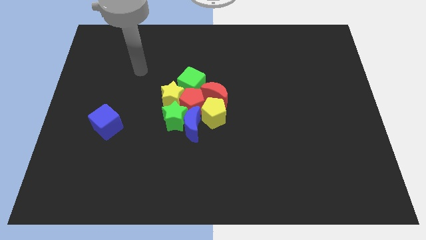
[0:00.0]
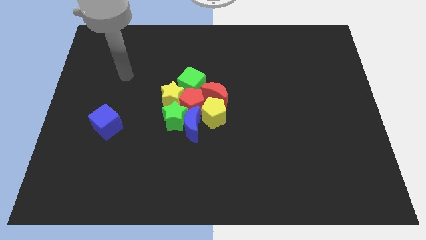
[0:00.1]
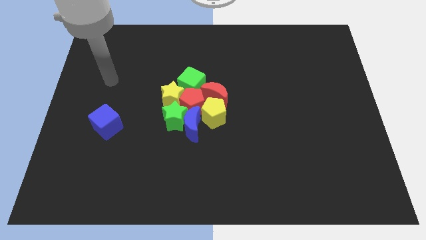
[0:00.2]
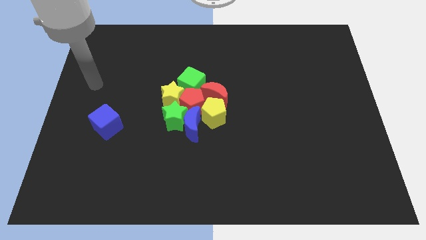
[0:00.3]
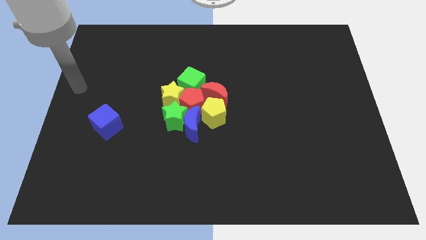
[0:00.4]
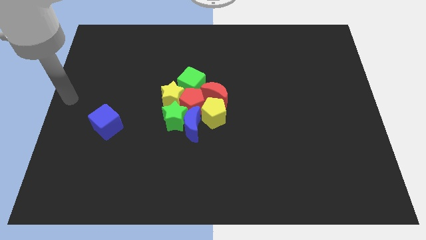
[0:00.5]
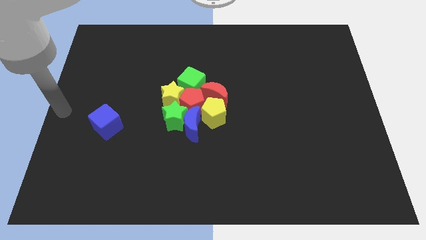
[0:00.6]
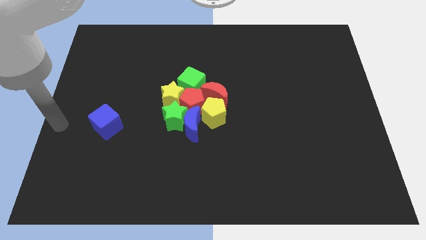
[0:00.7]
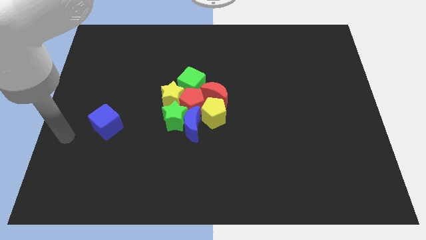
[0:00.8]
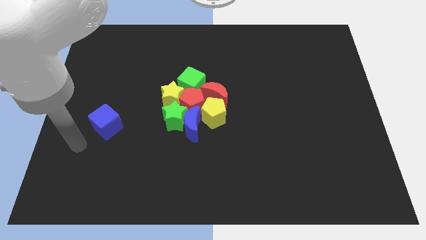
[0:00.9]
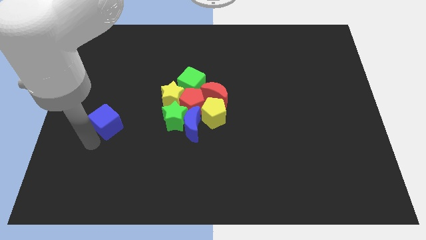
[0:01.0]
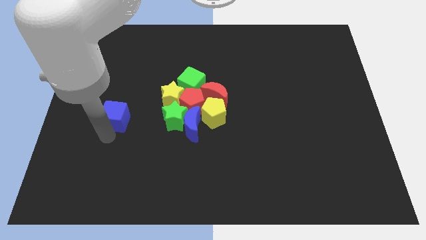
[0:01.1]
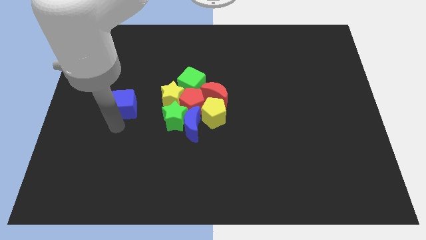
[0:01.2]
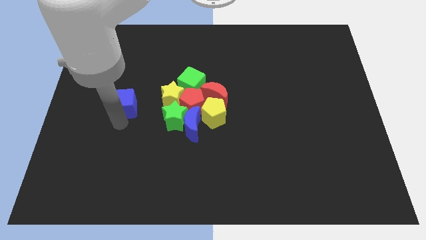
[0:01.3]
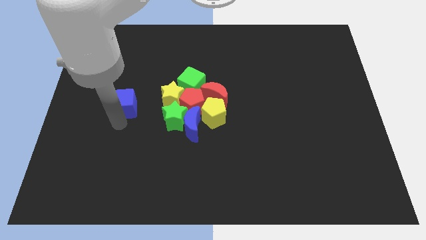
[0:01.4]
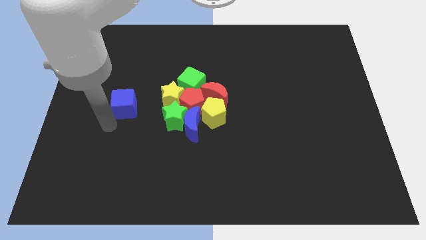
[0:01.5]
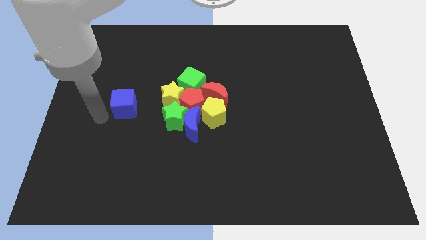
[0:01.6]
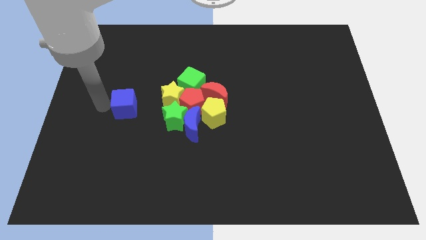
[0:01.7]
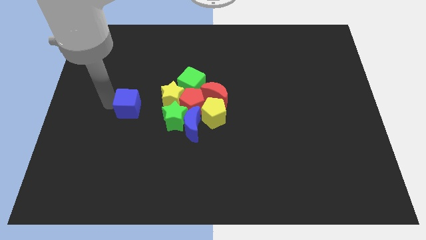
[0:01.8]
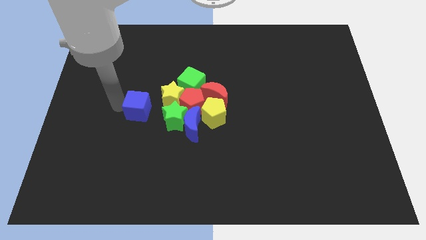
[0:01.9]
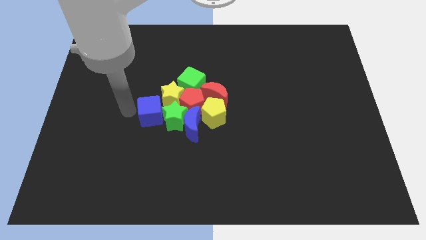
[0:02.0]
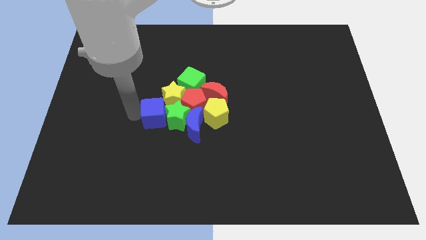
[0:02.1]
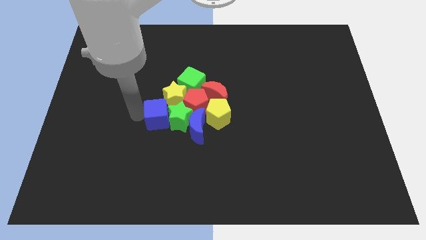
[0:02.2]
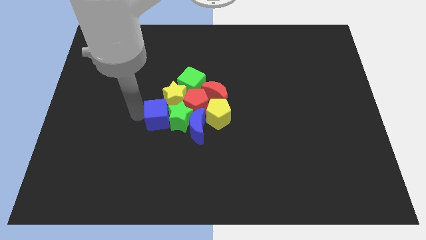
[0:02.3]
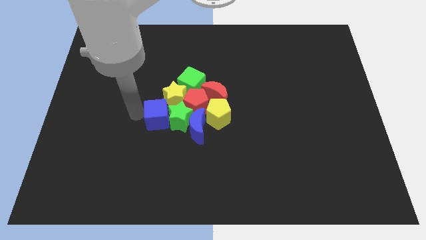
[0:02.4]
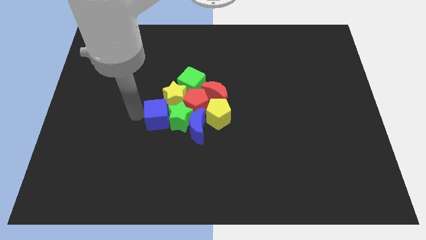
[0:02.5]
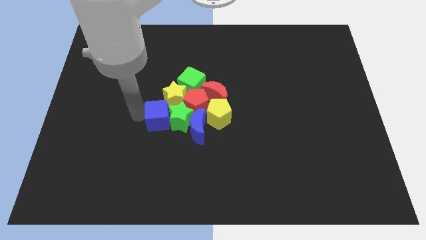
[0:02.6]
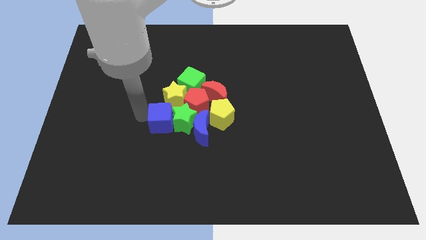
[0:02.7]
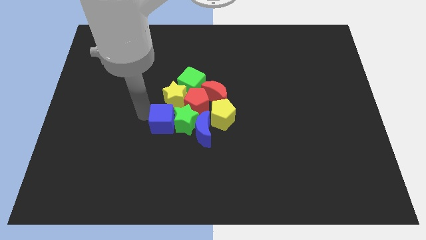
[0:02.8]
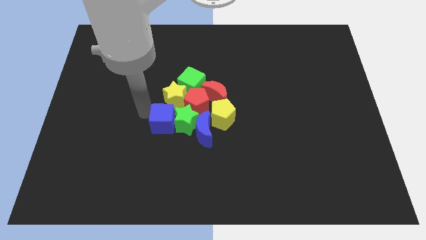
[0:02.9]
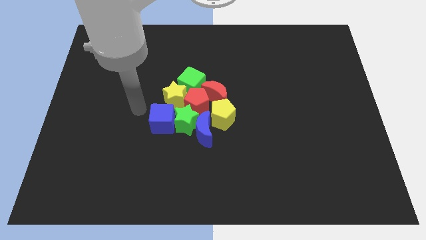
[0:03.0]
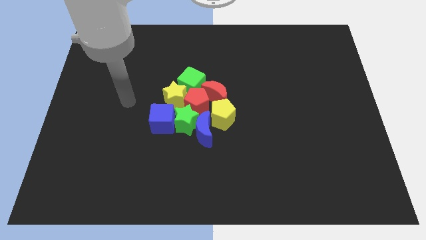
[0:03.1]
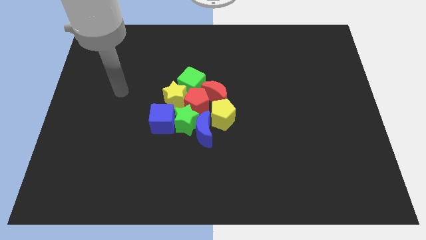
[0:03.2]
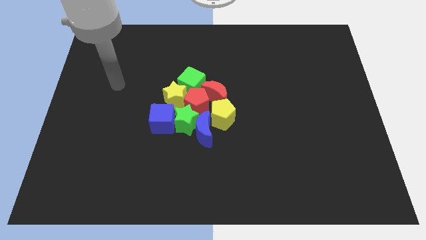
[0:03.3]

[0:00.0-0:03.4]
push the blue cube into the green star

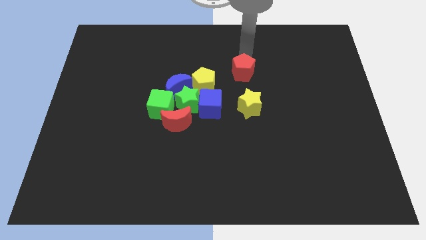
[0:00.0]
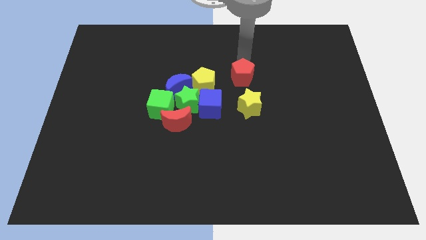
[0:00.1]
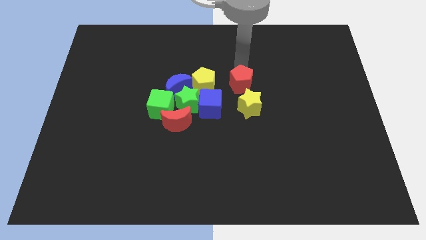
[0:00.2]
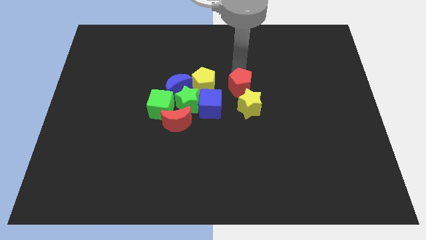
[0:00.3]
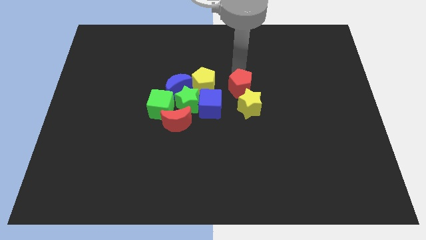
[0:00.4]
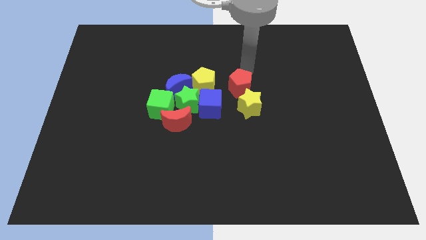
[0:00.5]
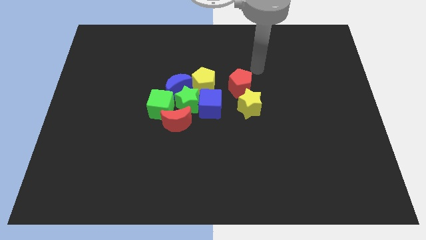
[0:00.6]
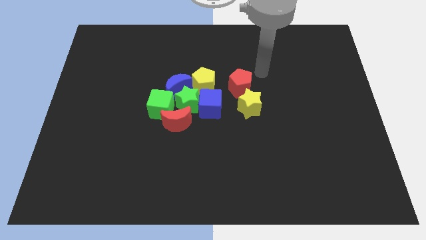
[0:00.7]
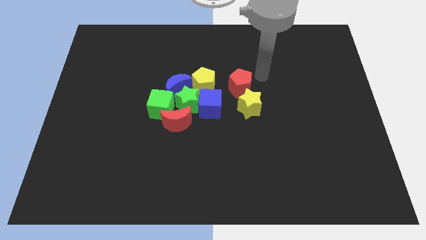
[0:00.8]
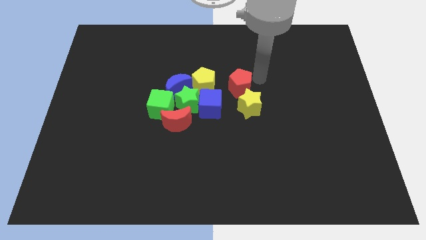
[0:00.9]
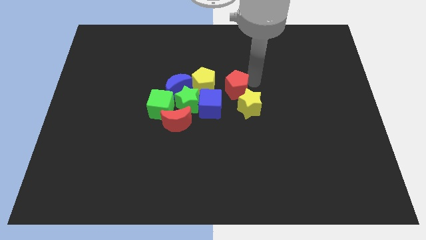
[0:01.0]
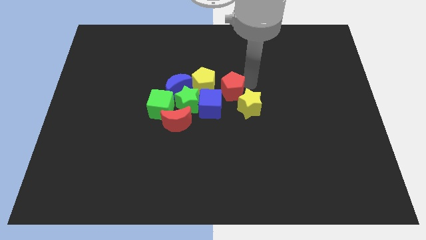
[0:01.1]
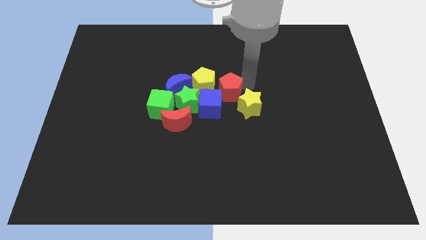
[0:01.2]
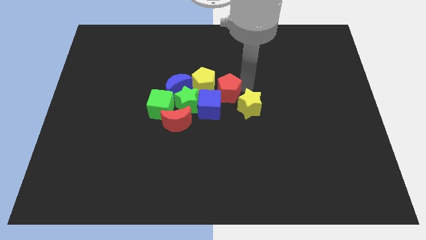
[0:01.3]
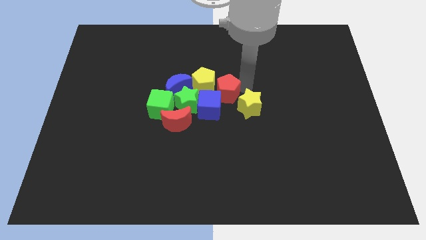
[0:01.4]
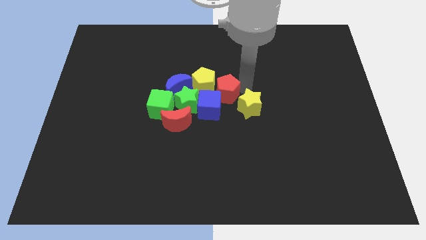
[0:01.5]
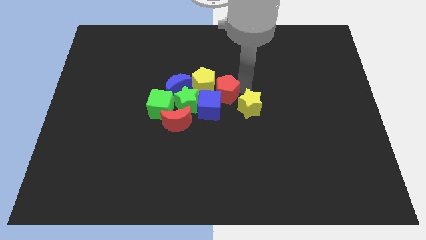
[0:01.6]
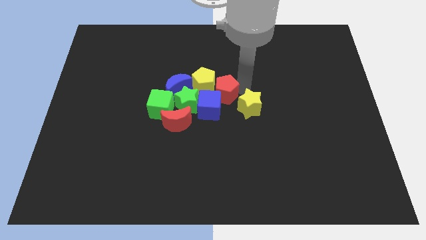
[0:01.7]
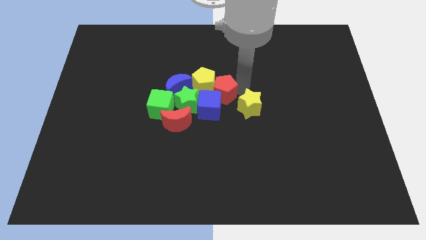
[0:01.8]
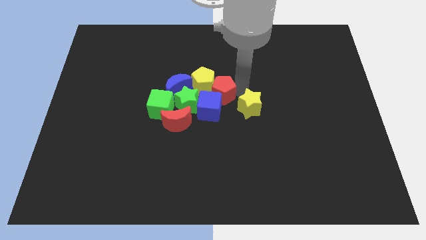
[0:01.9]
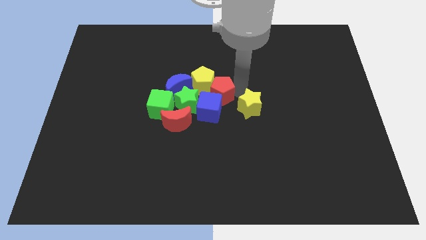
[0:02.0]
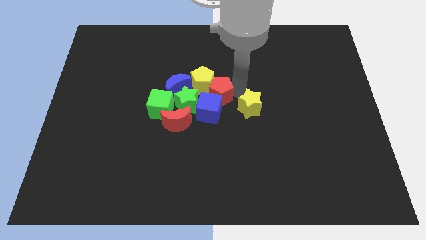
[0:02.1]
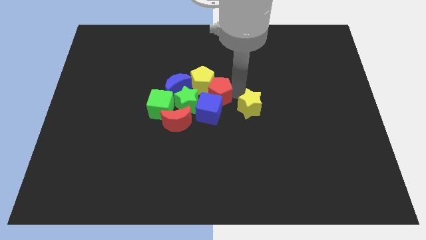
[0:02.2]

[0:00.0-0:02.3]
push the red pentagon towards the group of blocks at the center of the board

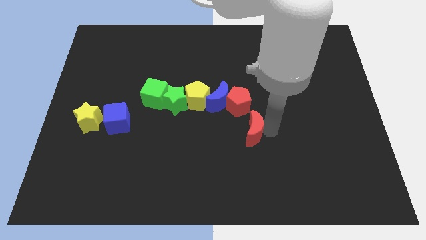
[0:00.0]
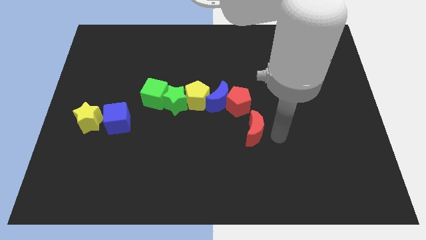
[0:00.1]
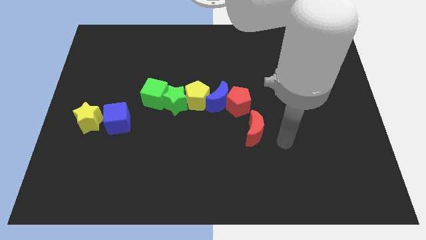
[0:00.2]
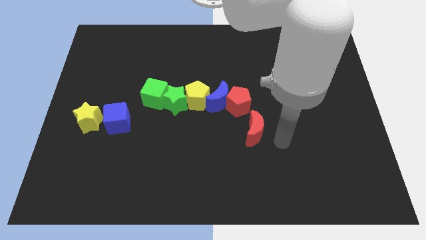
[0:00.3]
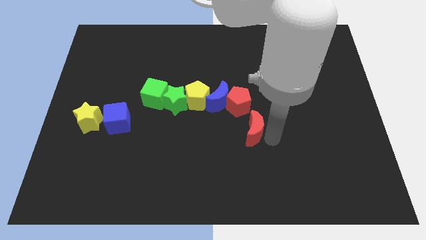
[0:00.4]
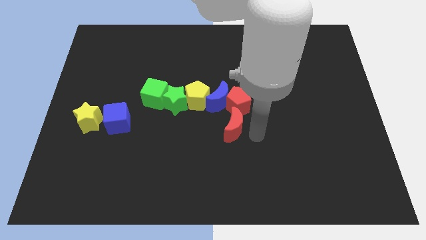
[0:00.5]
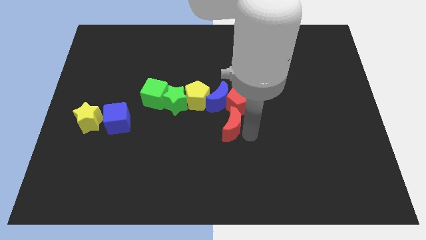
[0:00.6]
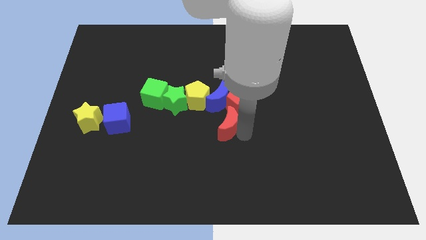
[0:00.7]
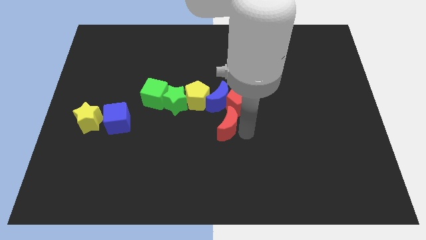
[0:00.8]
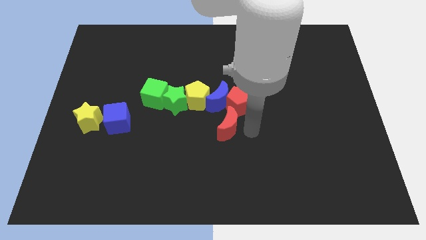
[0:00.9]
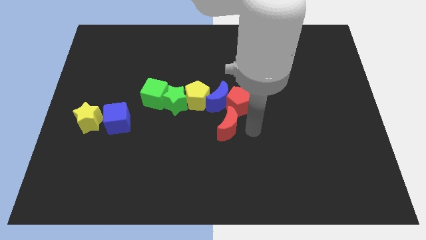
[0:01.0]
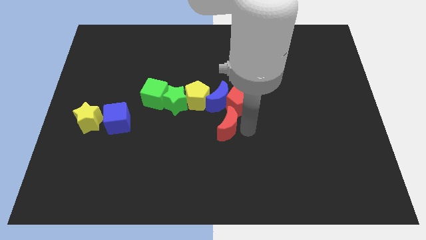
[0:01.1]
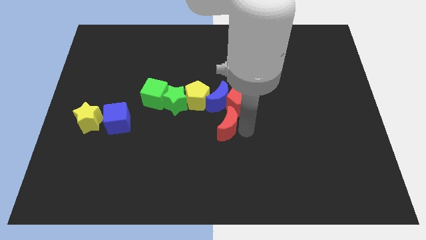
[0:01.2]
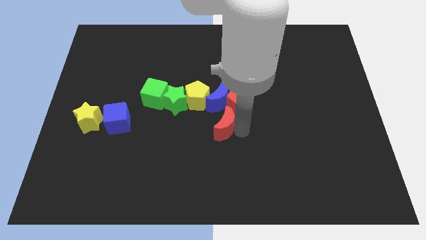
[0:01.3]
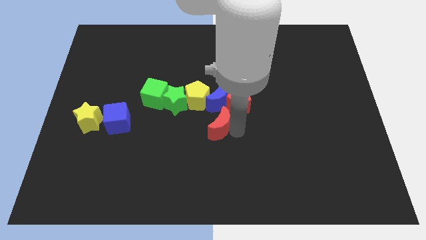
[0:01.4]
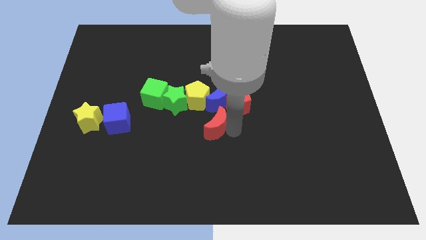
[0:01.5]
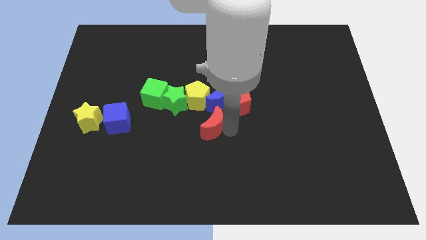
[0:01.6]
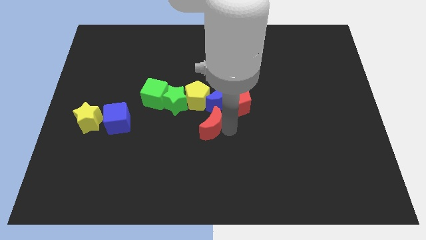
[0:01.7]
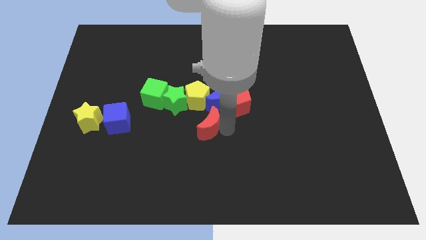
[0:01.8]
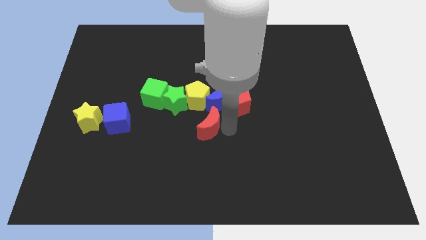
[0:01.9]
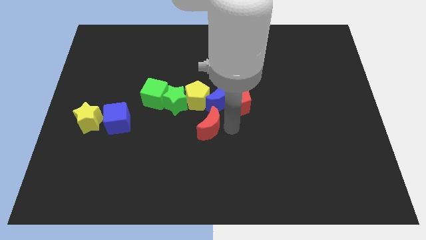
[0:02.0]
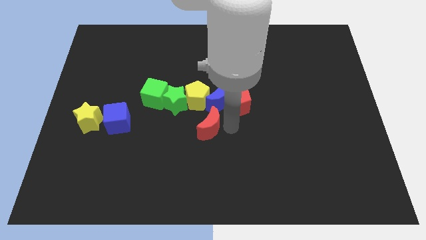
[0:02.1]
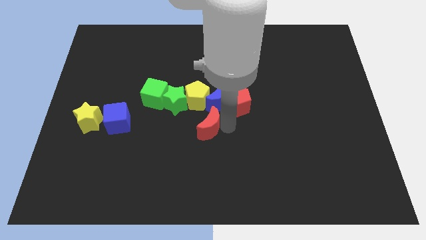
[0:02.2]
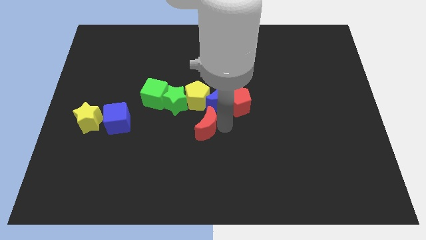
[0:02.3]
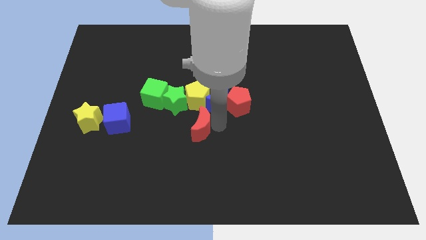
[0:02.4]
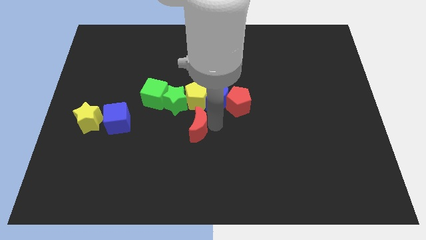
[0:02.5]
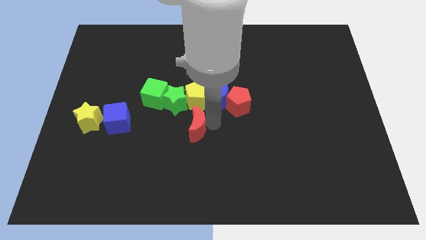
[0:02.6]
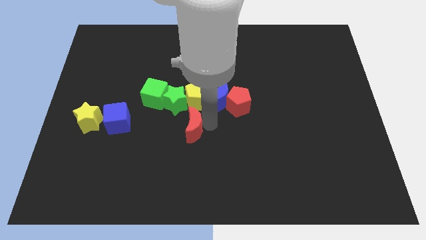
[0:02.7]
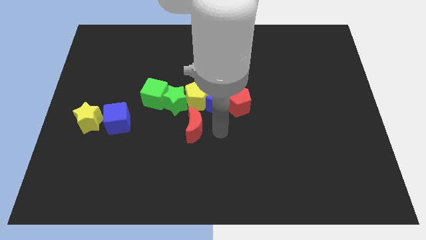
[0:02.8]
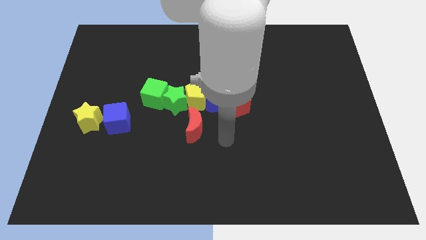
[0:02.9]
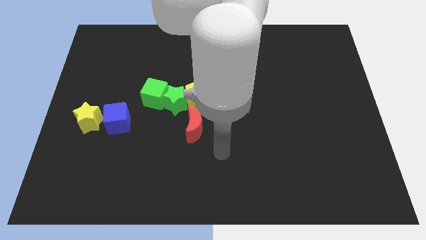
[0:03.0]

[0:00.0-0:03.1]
place red crescent below yellow star

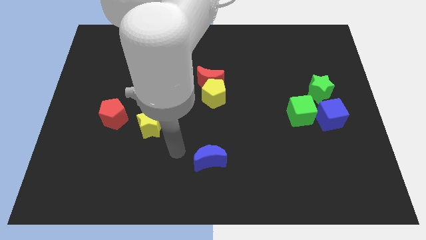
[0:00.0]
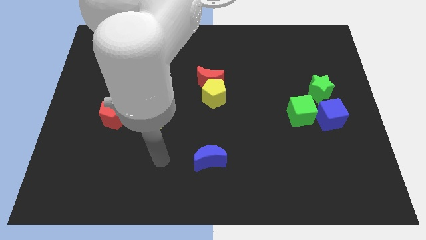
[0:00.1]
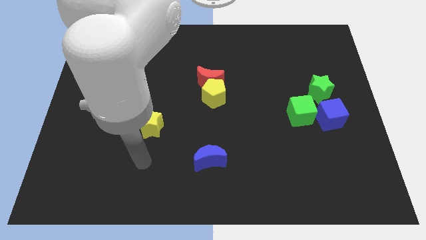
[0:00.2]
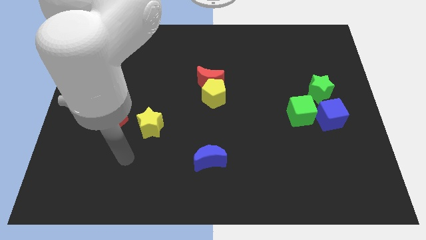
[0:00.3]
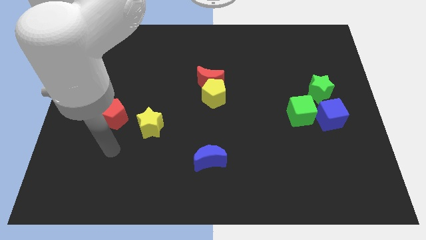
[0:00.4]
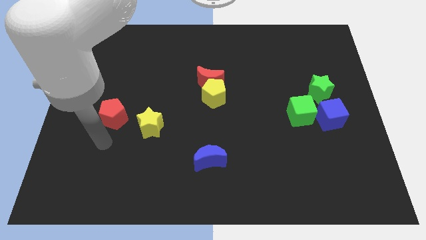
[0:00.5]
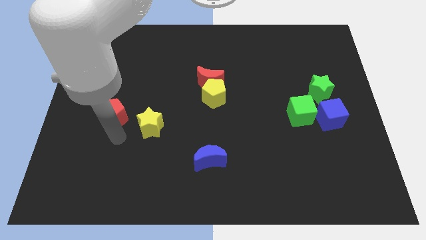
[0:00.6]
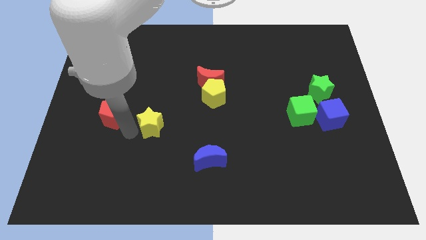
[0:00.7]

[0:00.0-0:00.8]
move the arm towards the left side of the star
